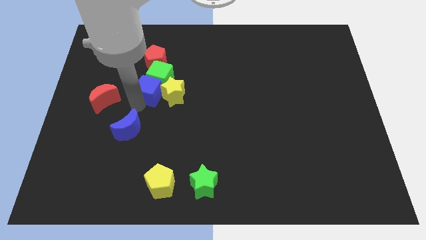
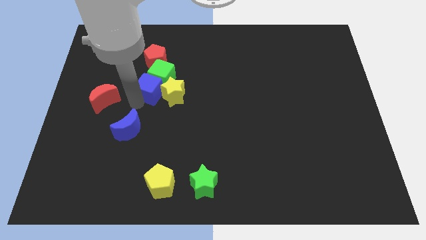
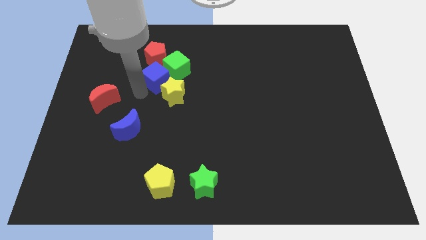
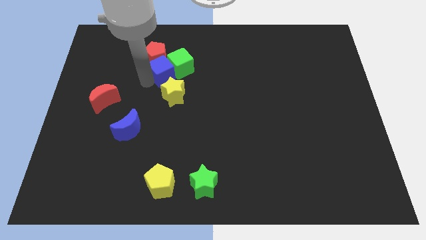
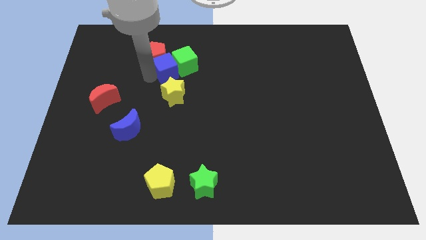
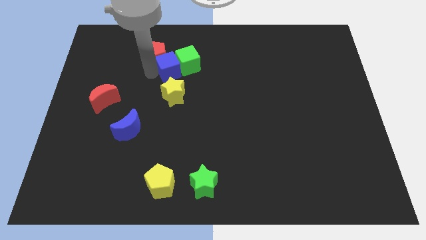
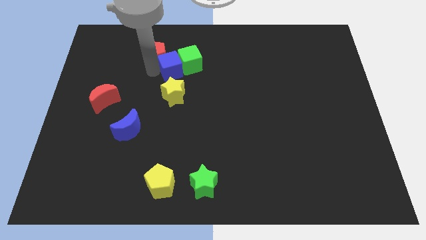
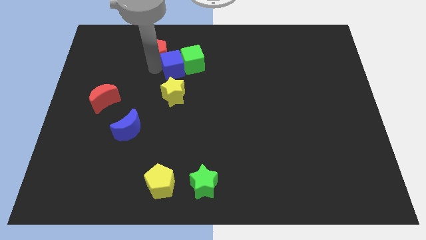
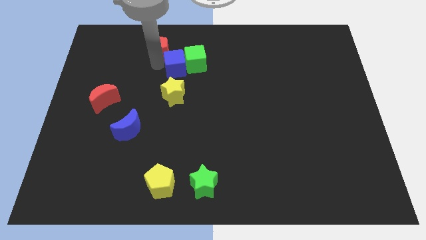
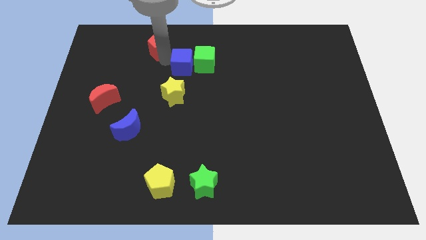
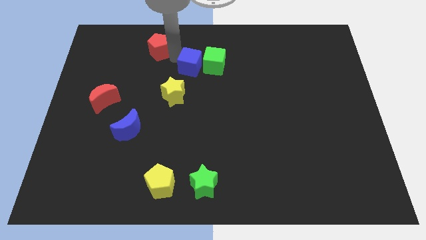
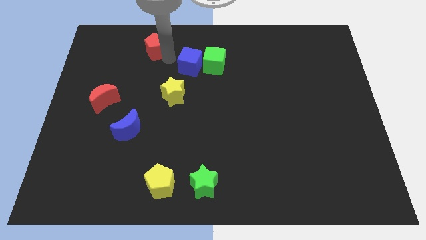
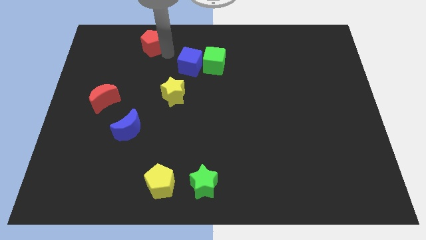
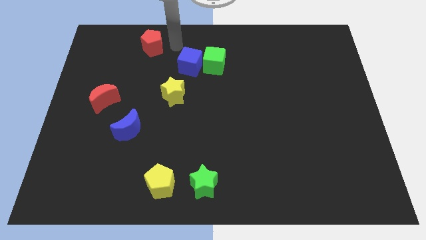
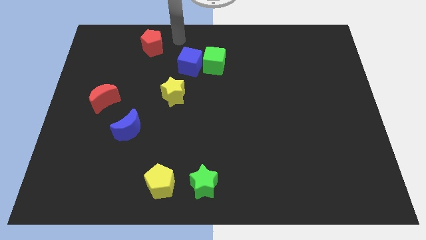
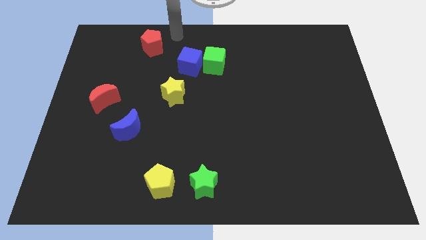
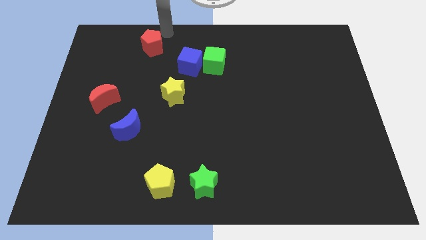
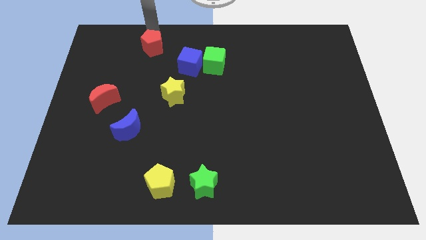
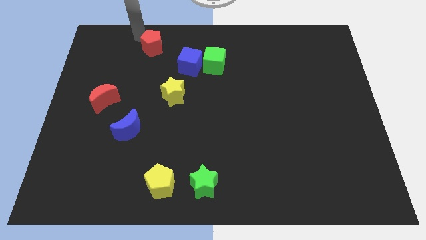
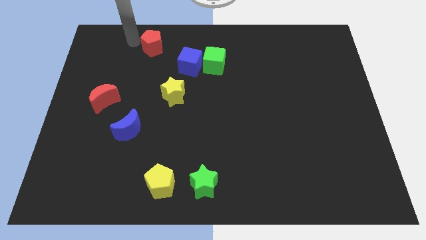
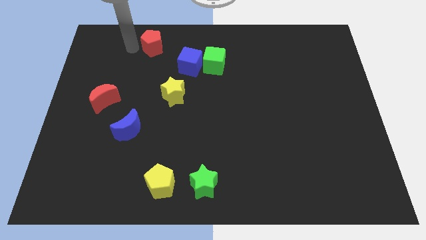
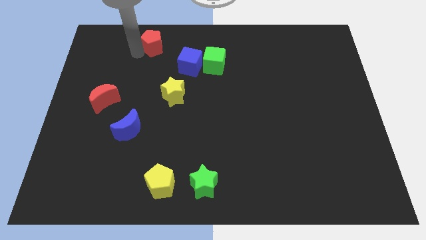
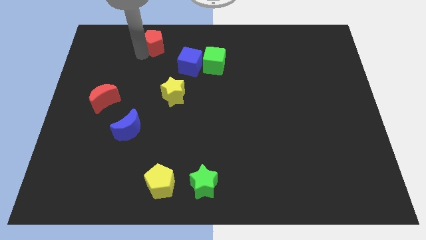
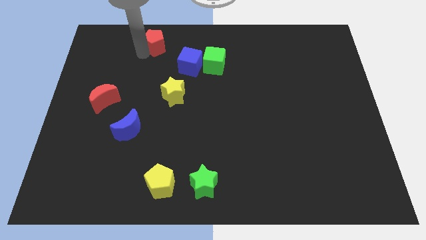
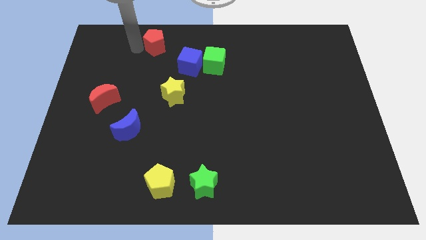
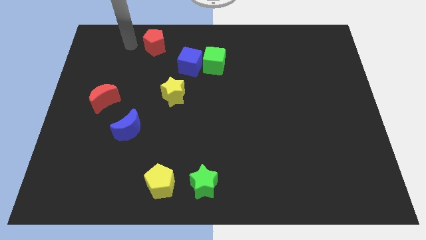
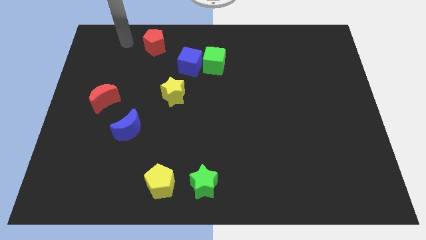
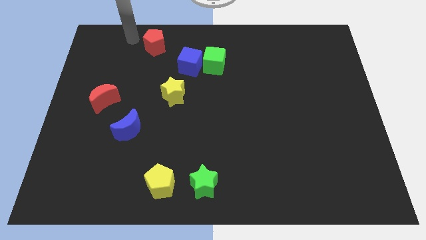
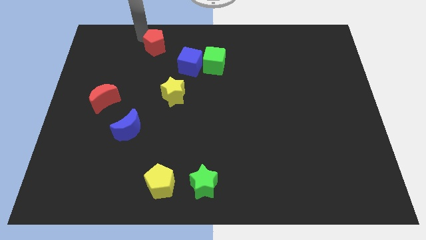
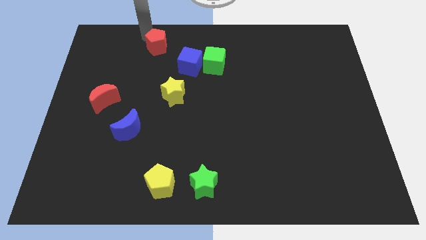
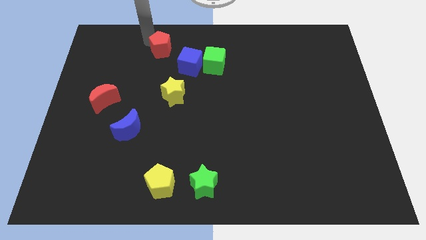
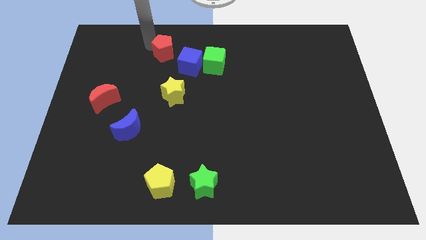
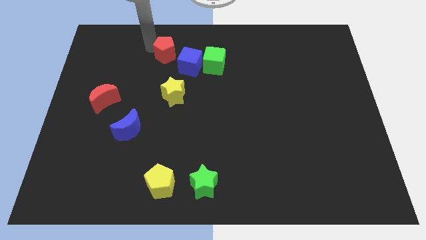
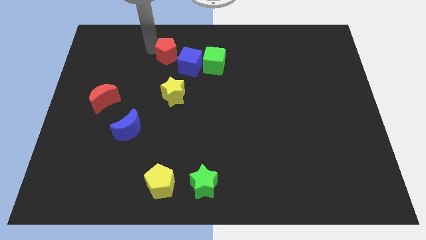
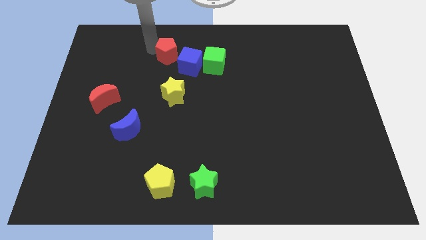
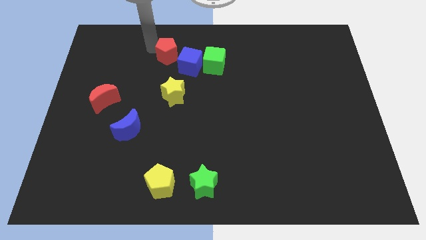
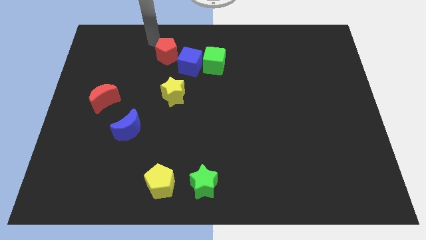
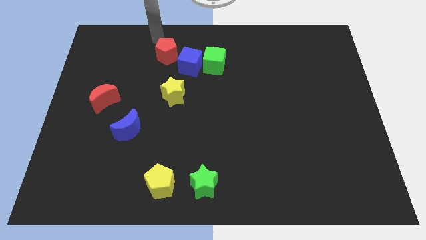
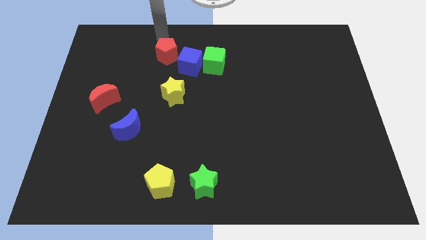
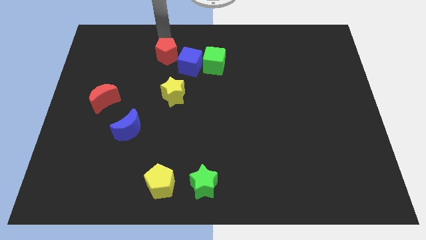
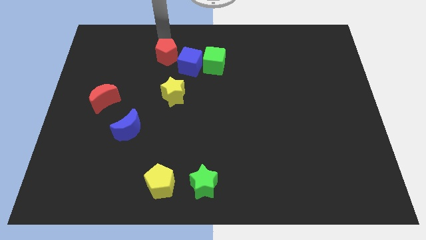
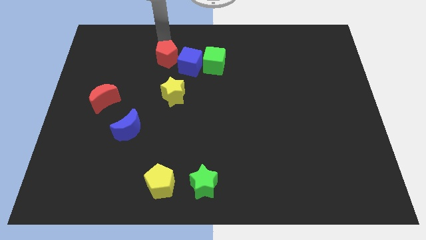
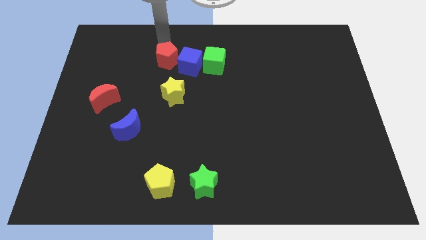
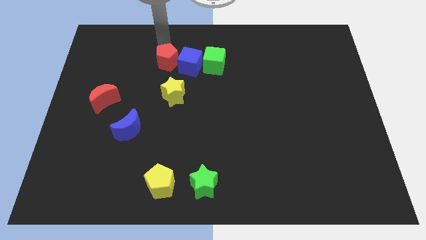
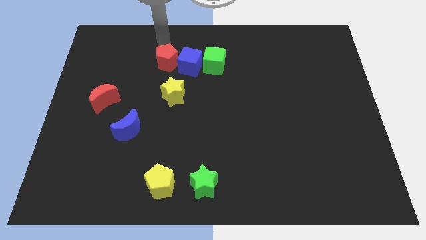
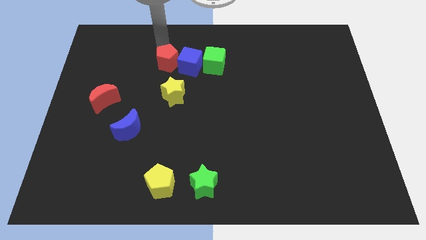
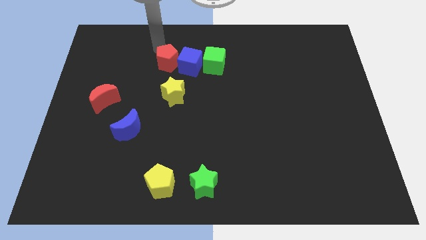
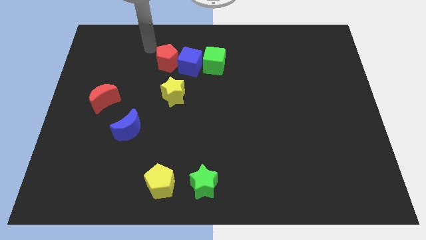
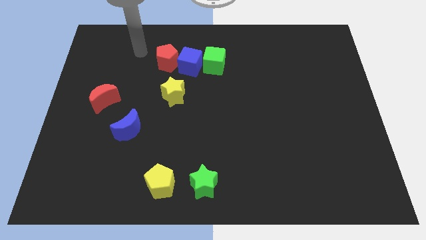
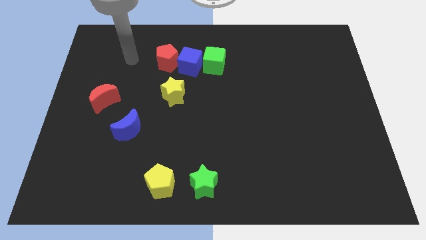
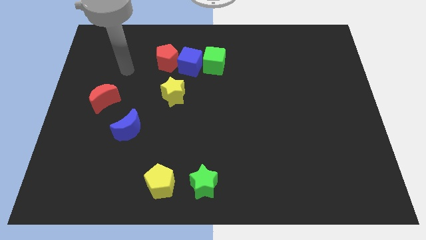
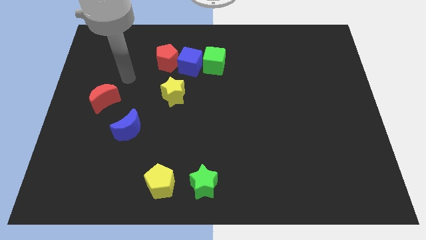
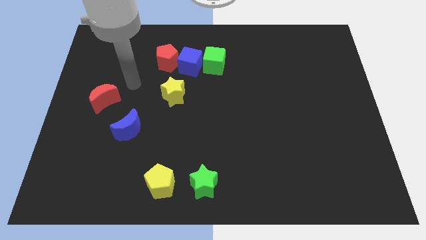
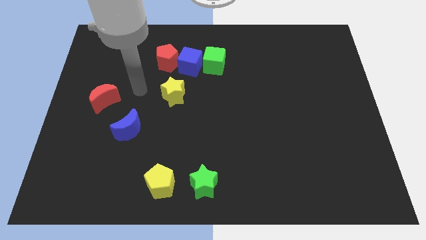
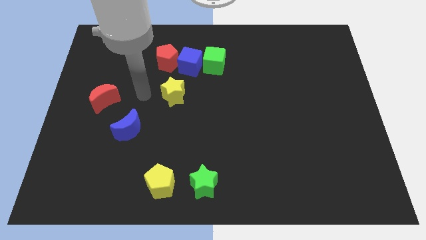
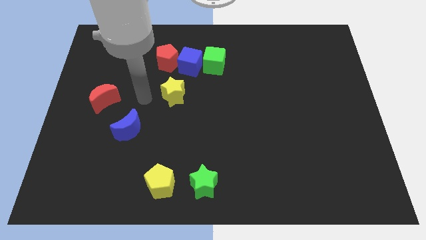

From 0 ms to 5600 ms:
form a horizontal line using the red pentagon blue cube and green cube at the top of the yellow star

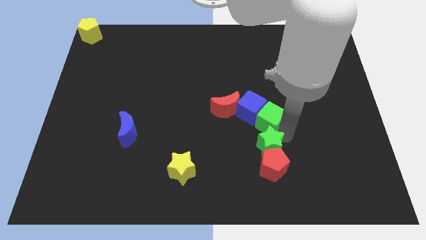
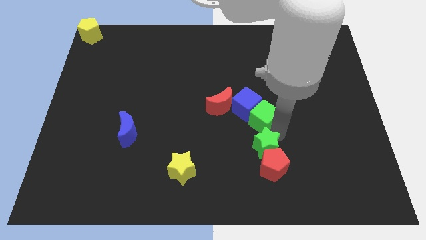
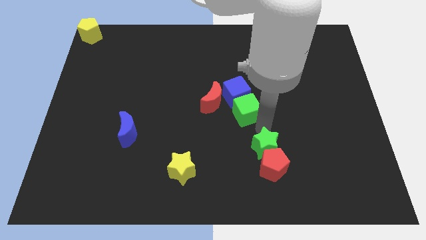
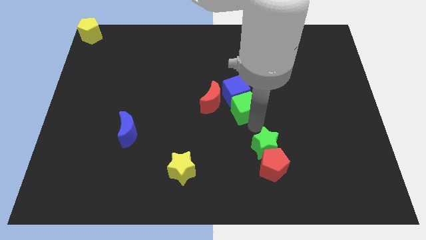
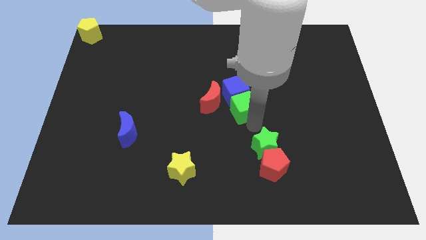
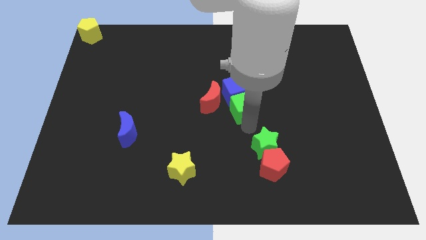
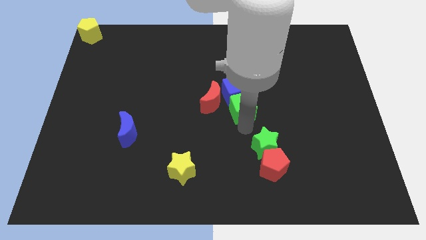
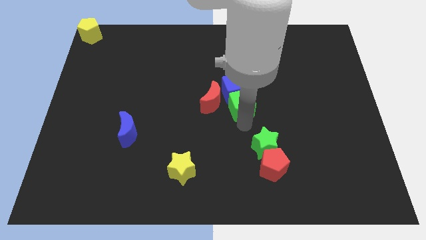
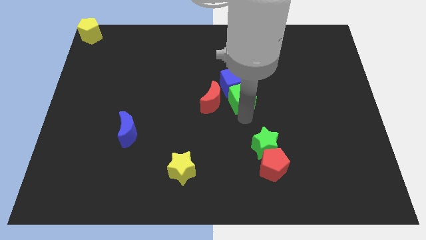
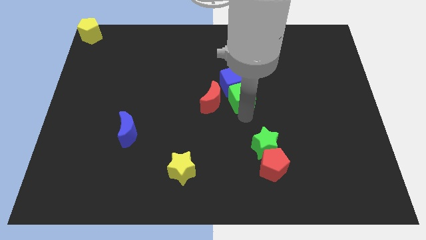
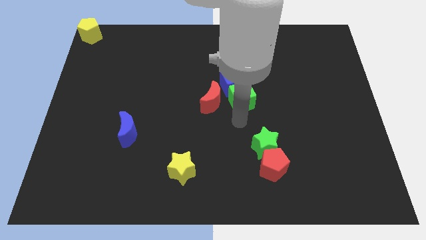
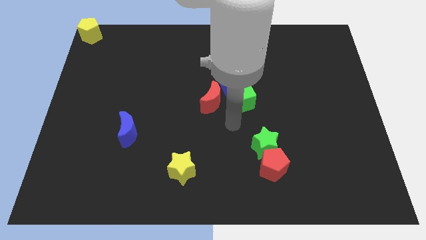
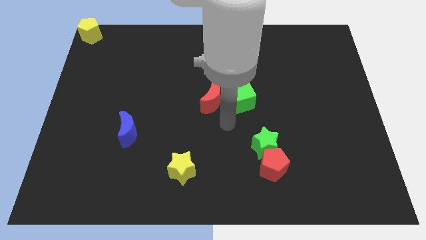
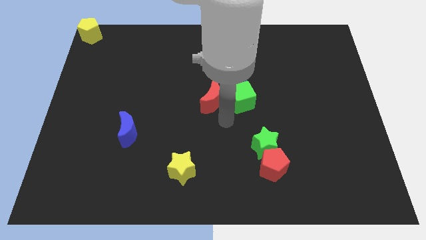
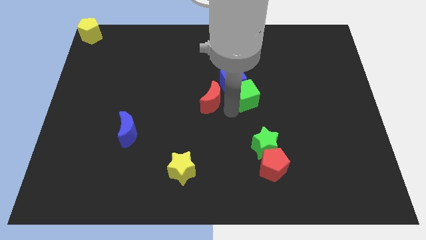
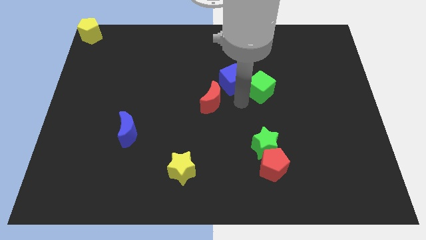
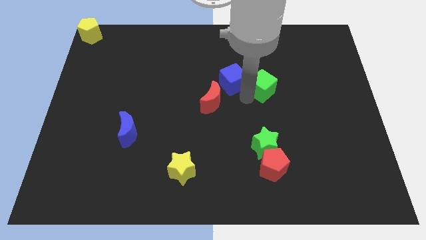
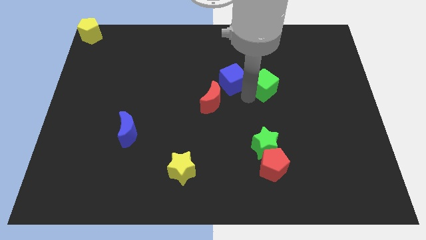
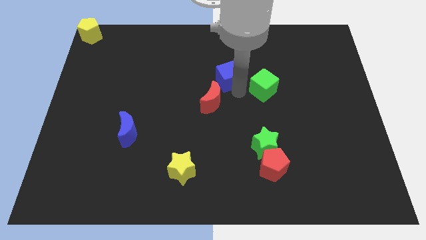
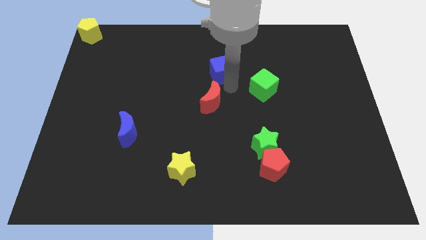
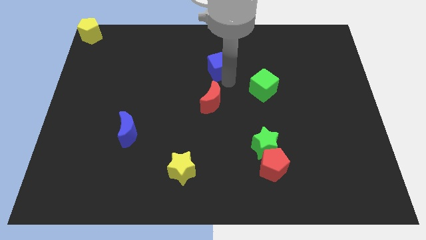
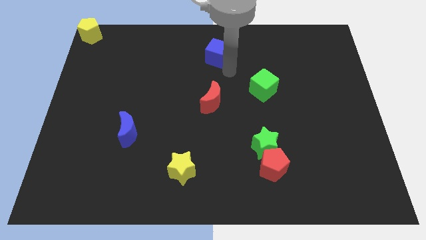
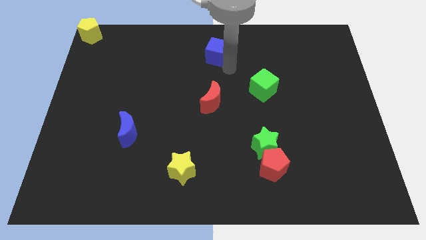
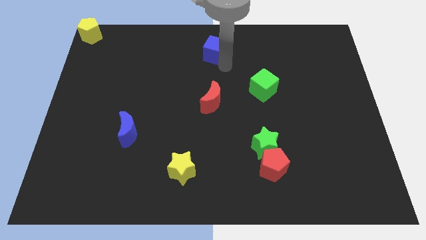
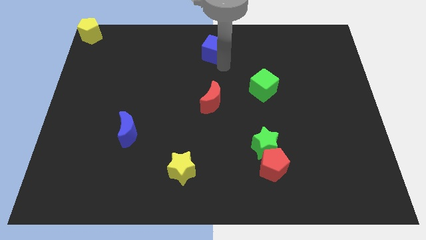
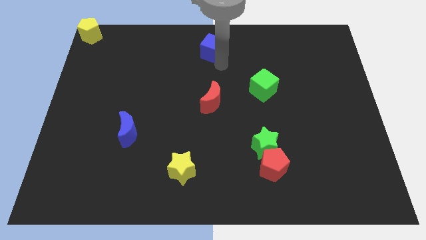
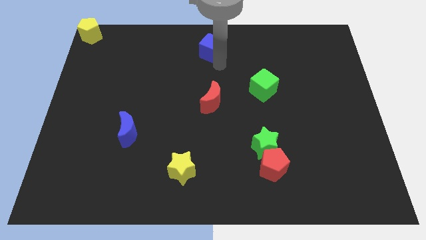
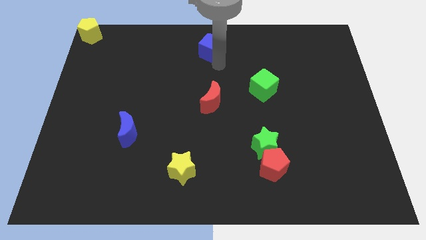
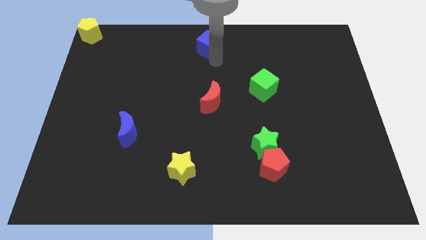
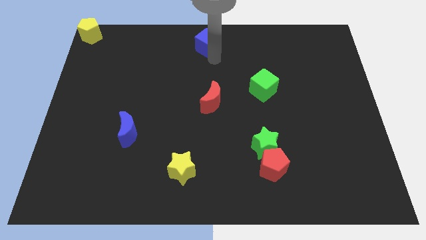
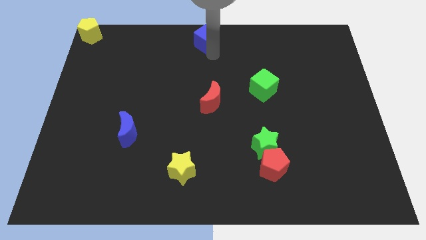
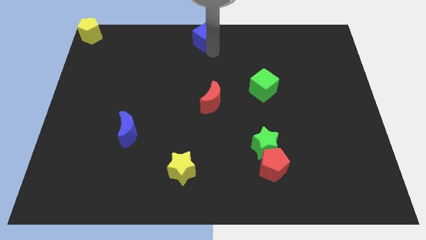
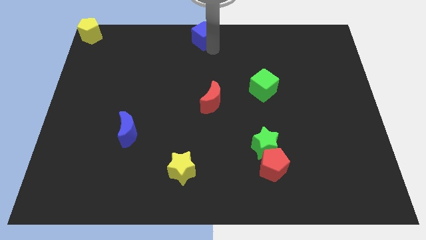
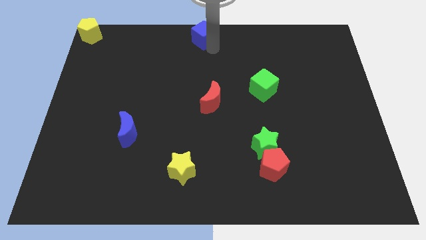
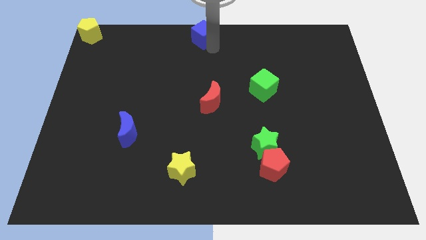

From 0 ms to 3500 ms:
push blue cube above red crescent
